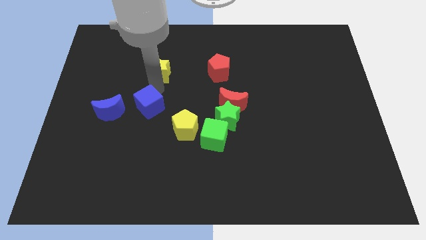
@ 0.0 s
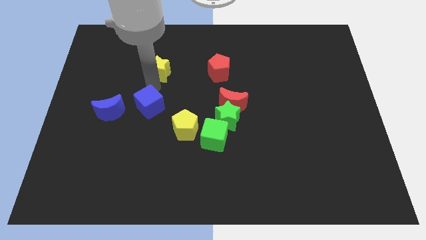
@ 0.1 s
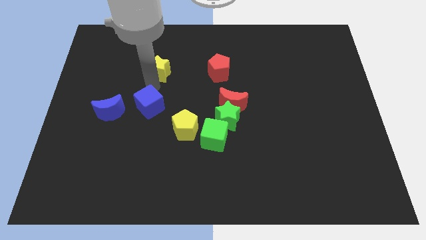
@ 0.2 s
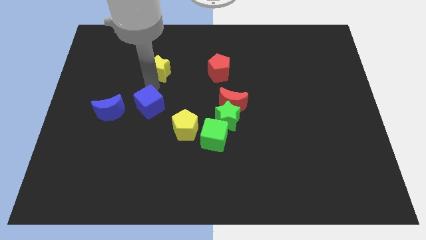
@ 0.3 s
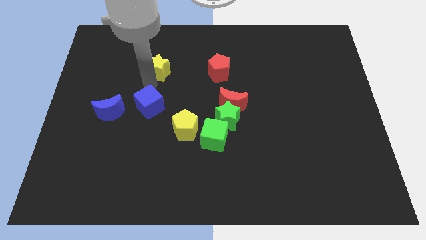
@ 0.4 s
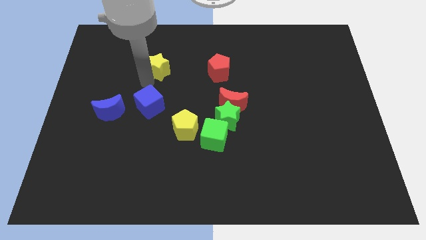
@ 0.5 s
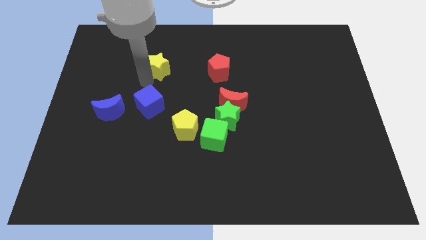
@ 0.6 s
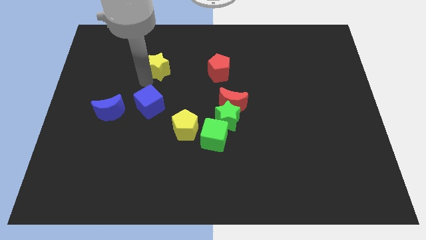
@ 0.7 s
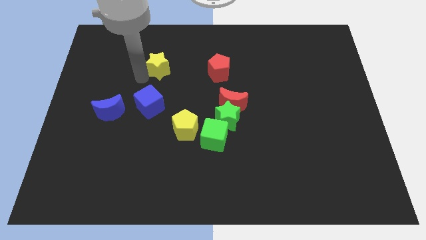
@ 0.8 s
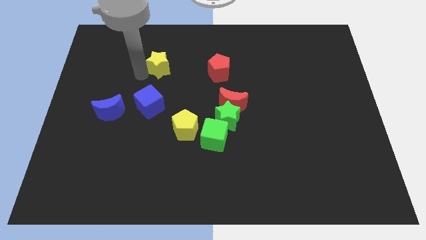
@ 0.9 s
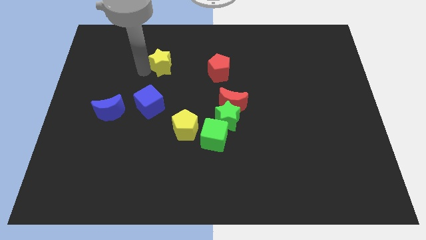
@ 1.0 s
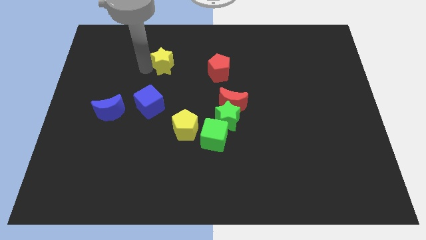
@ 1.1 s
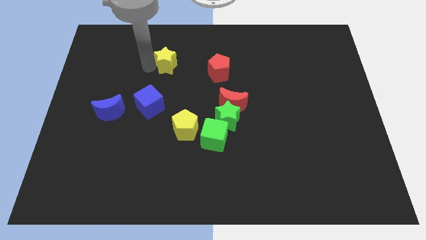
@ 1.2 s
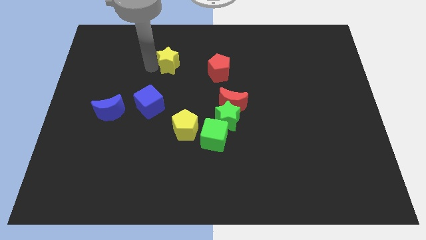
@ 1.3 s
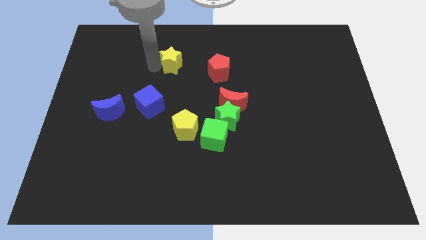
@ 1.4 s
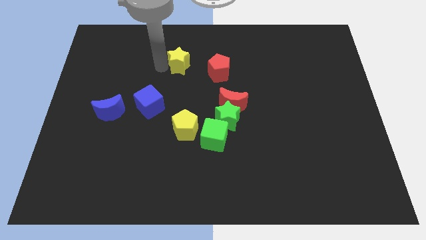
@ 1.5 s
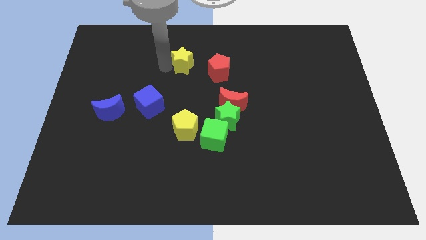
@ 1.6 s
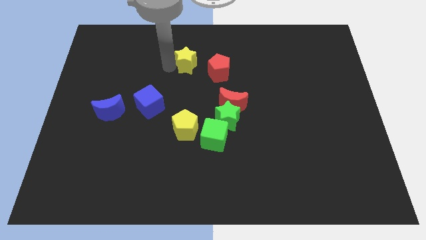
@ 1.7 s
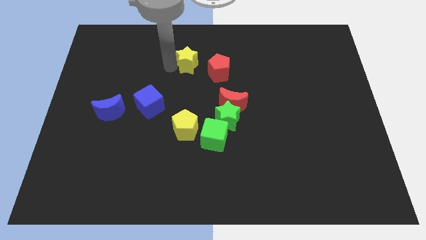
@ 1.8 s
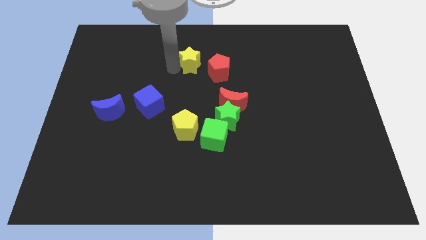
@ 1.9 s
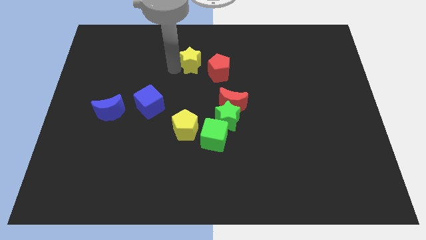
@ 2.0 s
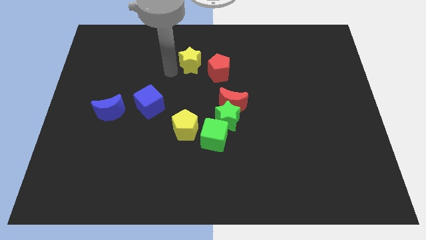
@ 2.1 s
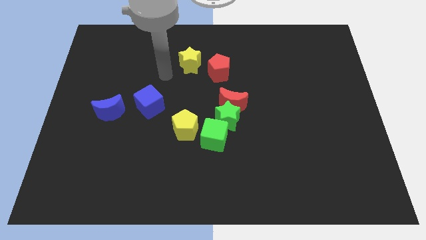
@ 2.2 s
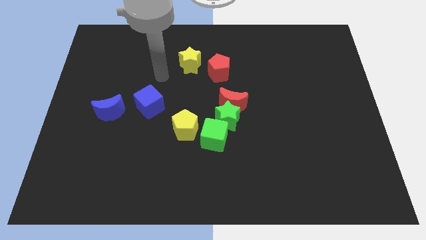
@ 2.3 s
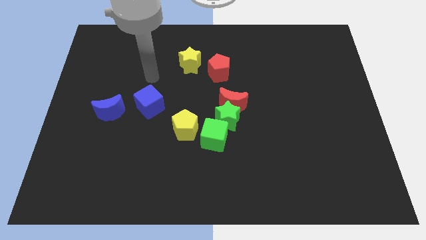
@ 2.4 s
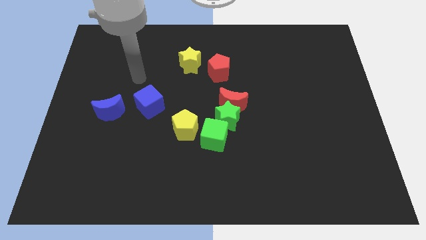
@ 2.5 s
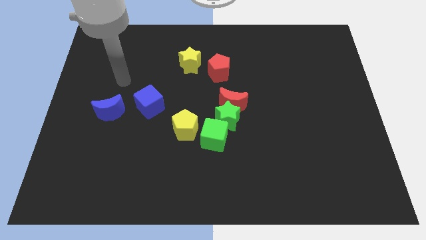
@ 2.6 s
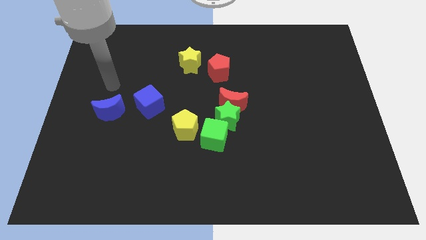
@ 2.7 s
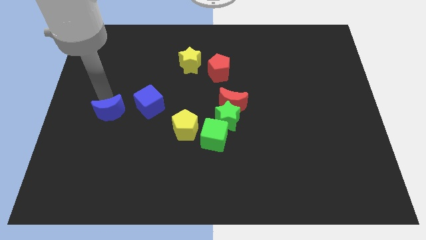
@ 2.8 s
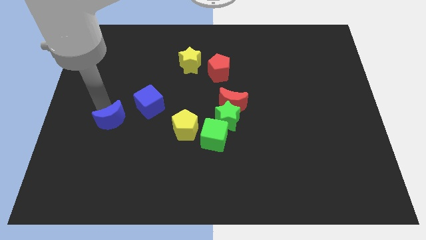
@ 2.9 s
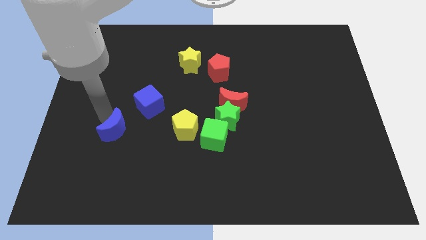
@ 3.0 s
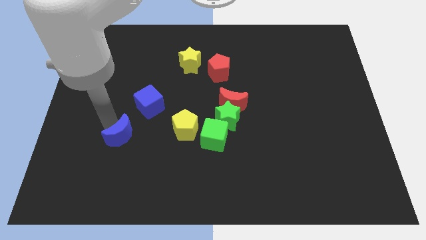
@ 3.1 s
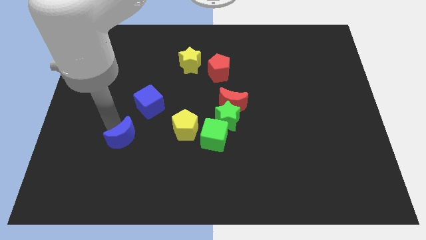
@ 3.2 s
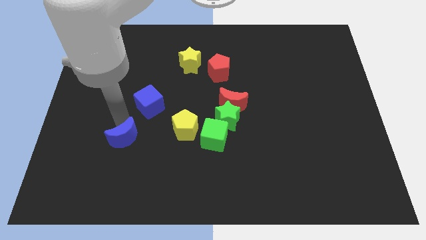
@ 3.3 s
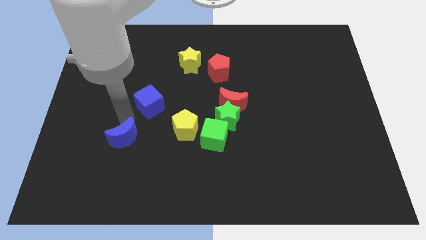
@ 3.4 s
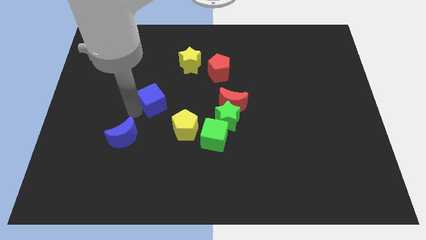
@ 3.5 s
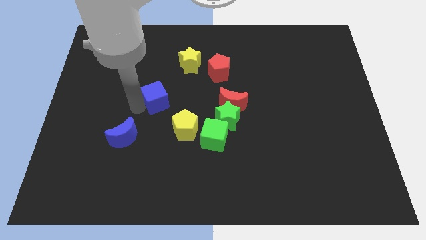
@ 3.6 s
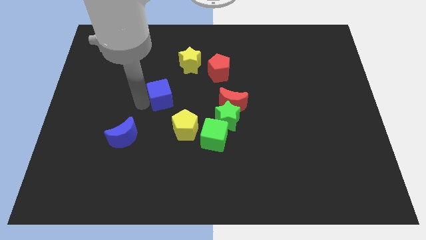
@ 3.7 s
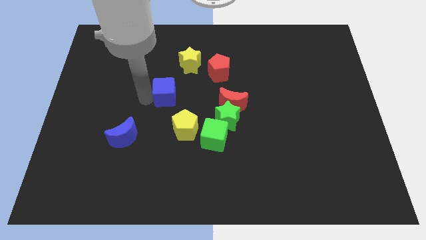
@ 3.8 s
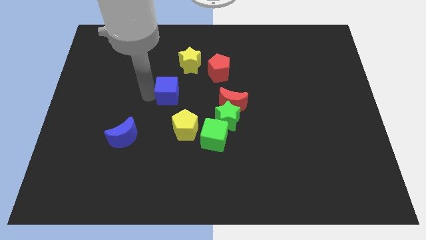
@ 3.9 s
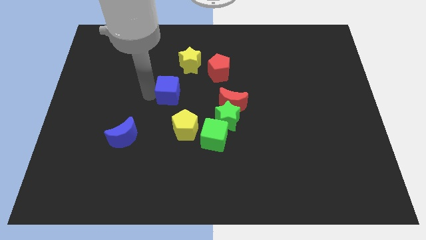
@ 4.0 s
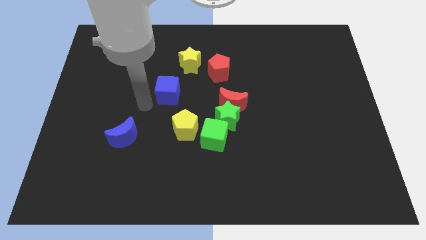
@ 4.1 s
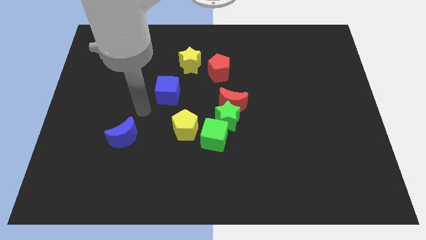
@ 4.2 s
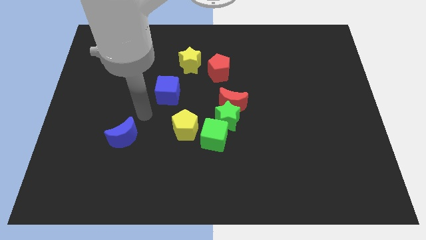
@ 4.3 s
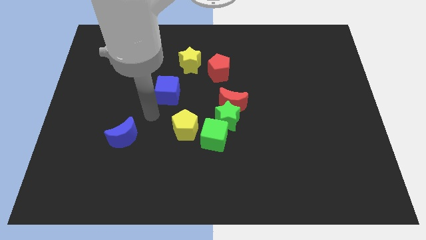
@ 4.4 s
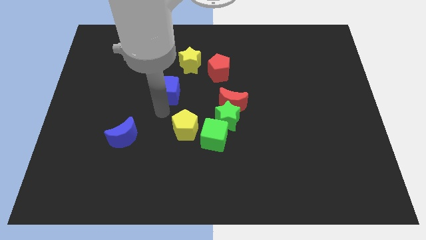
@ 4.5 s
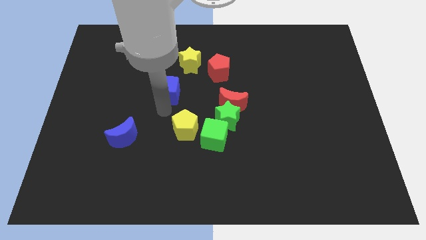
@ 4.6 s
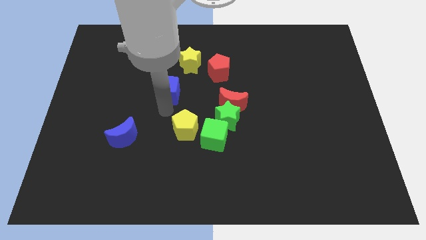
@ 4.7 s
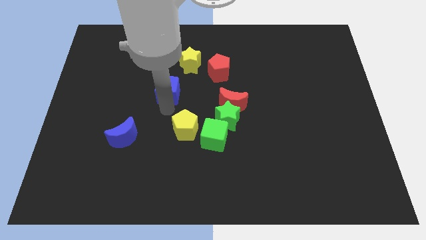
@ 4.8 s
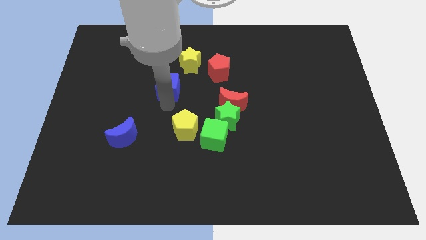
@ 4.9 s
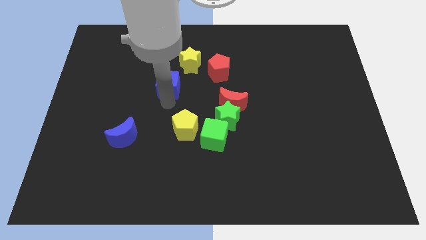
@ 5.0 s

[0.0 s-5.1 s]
push the blue cube slightly upwards

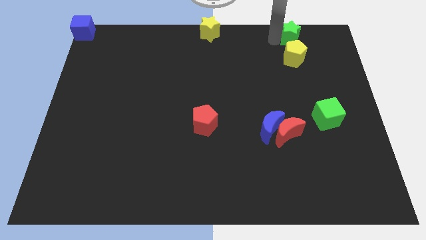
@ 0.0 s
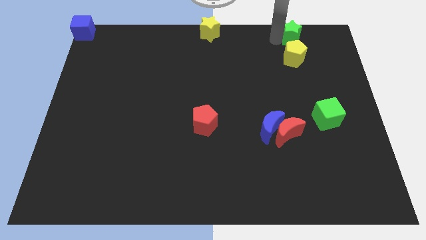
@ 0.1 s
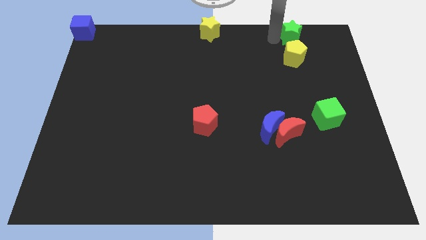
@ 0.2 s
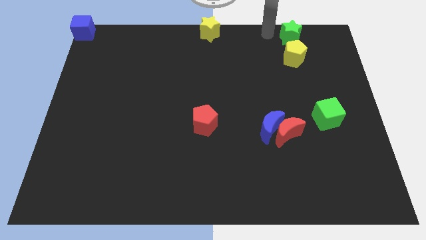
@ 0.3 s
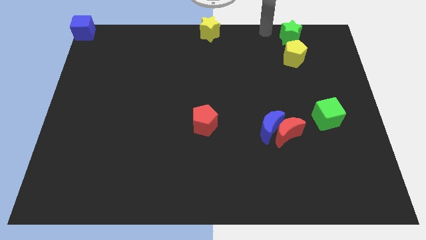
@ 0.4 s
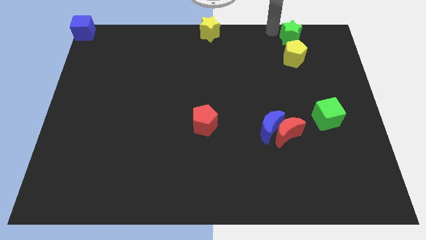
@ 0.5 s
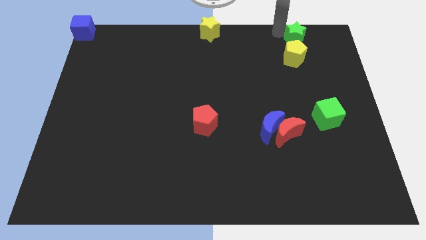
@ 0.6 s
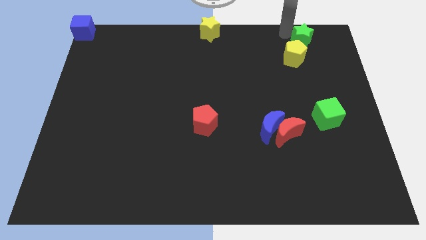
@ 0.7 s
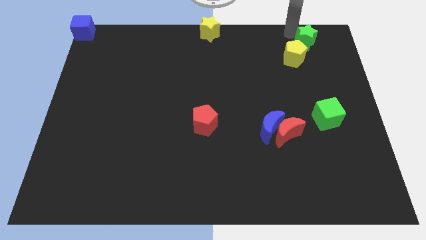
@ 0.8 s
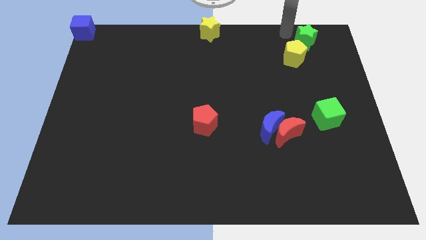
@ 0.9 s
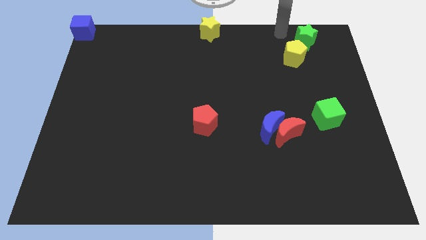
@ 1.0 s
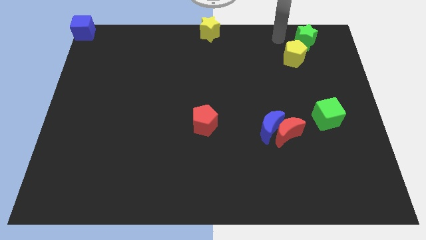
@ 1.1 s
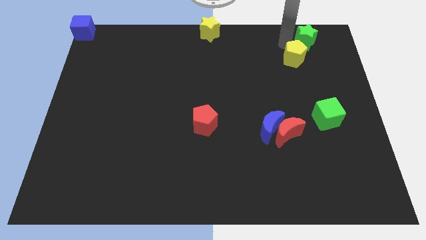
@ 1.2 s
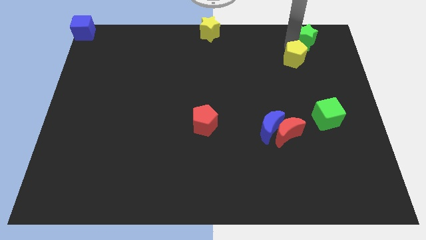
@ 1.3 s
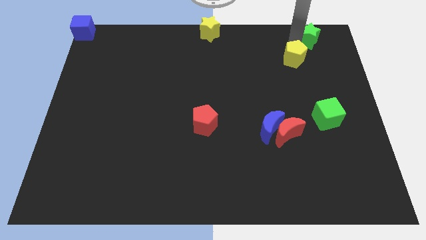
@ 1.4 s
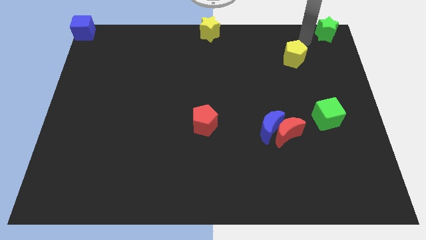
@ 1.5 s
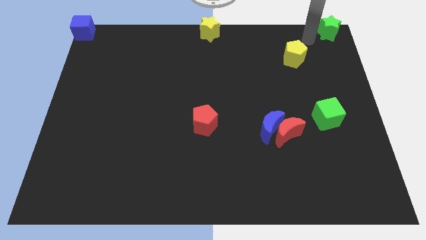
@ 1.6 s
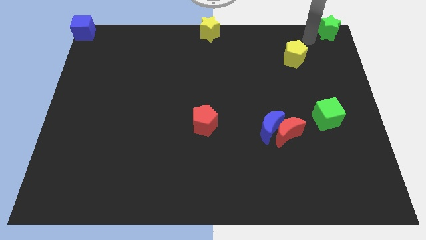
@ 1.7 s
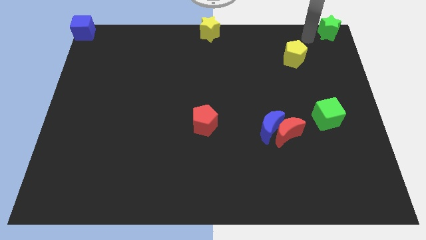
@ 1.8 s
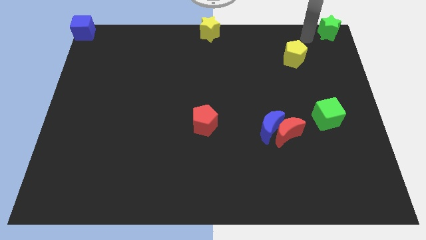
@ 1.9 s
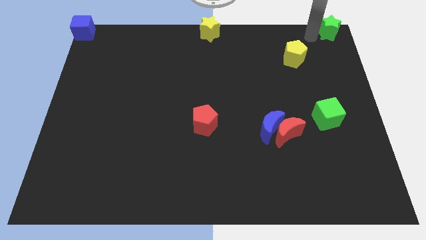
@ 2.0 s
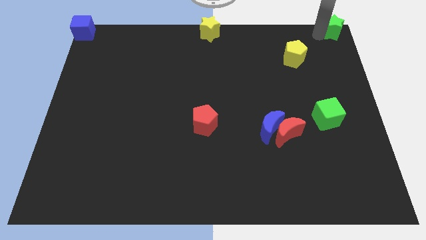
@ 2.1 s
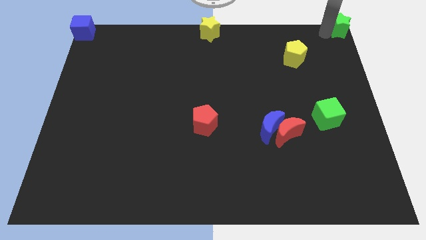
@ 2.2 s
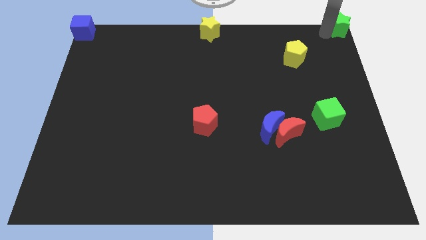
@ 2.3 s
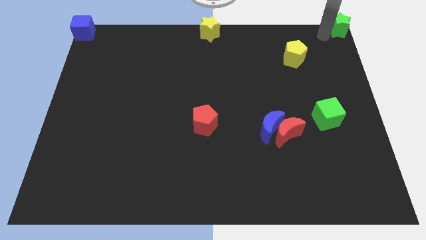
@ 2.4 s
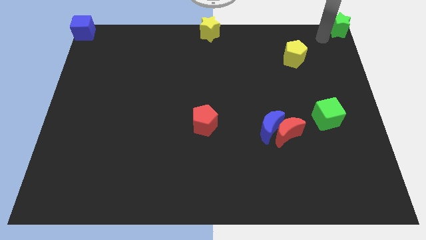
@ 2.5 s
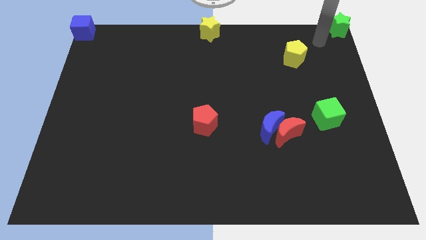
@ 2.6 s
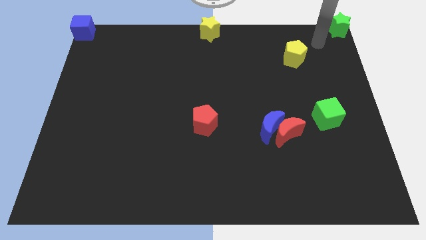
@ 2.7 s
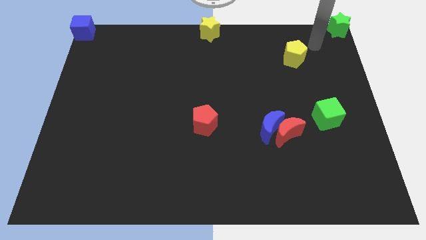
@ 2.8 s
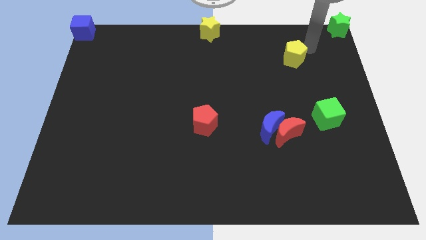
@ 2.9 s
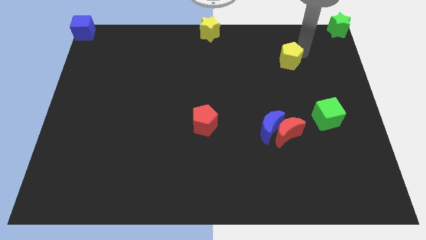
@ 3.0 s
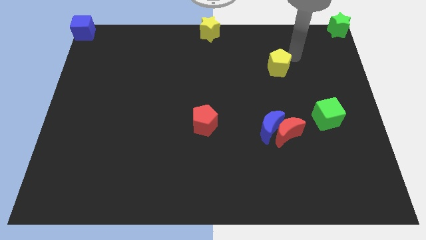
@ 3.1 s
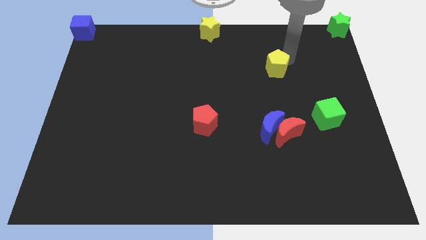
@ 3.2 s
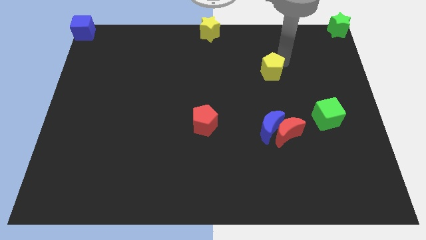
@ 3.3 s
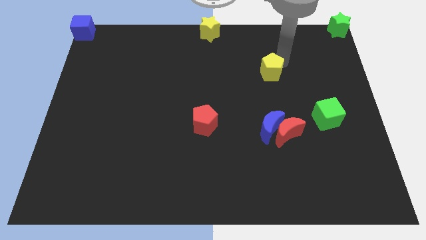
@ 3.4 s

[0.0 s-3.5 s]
move green star and the yellow pentagon away from each other

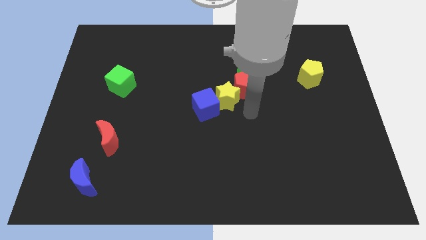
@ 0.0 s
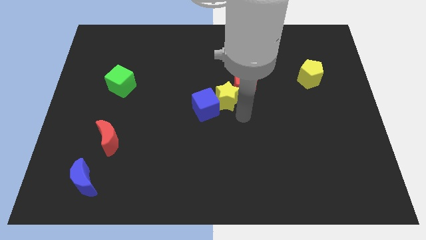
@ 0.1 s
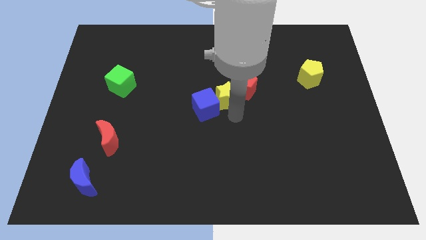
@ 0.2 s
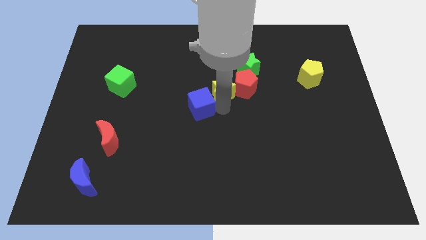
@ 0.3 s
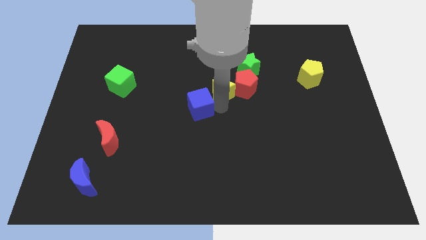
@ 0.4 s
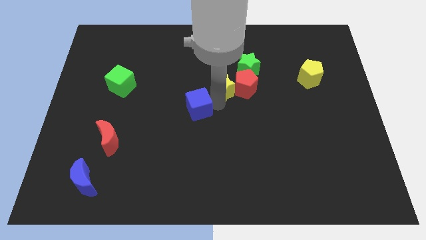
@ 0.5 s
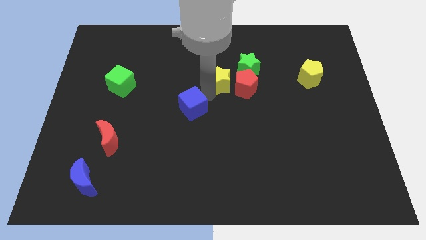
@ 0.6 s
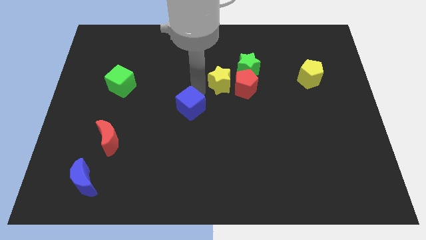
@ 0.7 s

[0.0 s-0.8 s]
separate the yellow star from the red pentagon and blue cube
